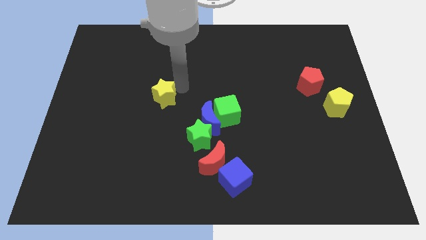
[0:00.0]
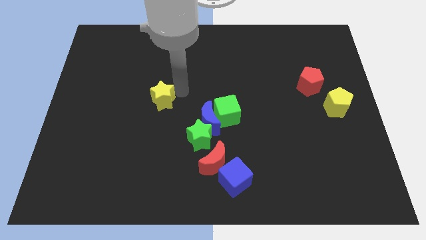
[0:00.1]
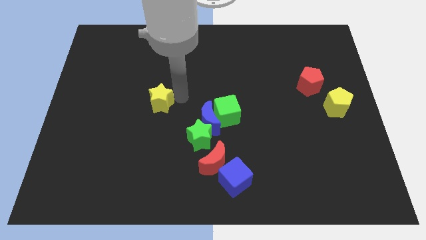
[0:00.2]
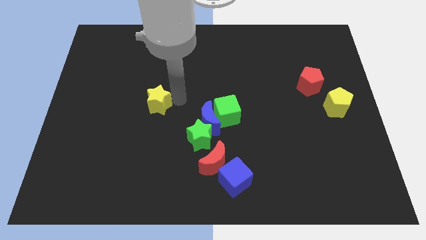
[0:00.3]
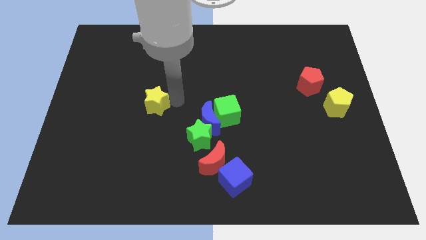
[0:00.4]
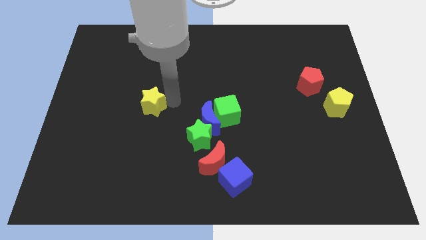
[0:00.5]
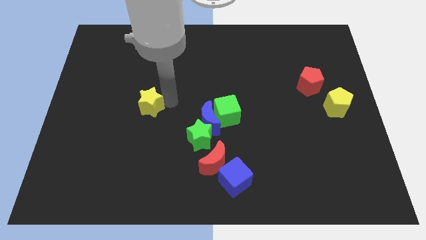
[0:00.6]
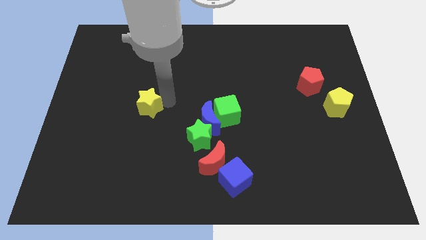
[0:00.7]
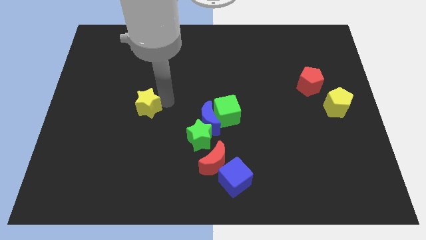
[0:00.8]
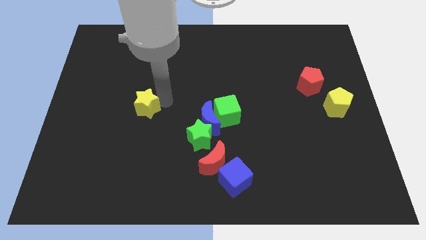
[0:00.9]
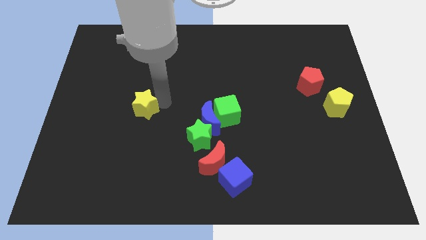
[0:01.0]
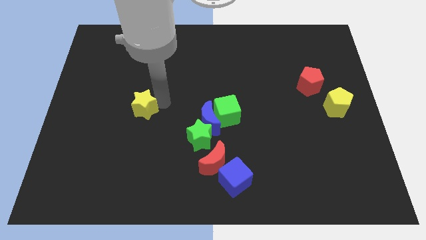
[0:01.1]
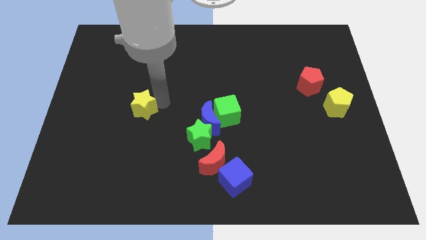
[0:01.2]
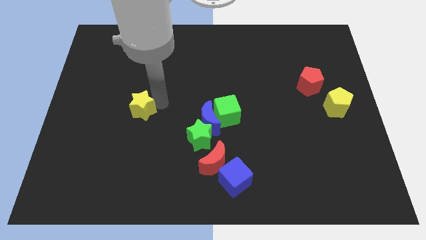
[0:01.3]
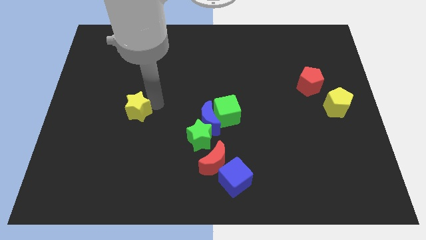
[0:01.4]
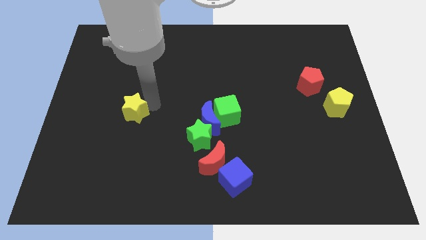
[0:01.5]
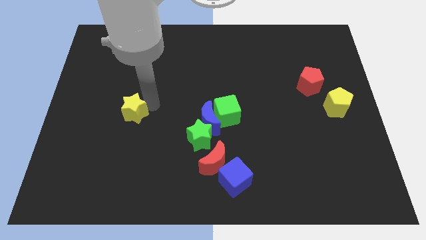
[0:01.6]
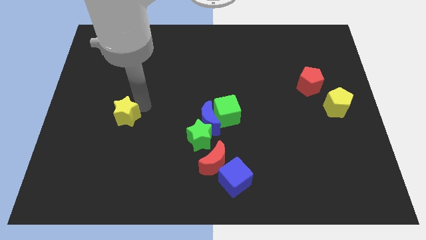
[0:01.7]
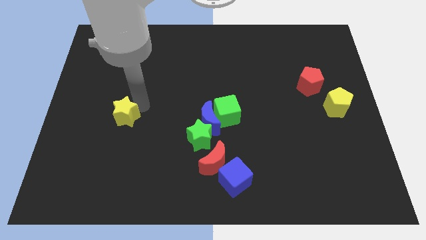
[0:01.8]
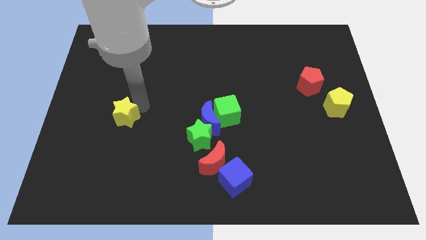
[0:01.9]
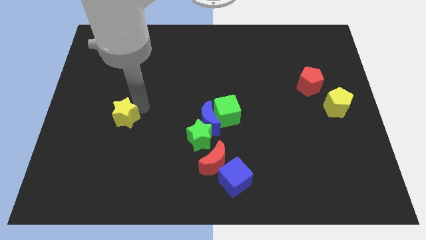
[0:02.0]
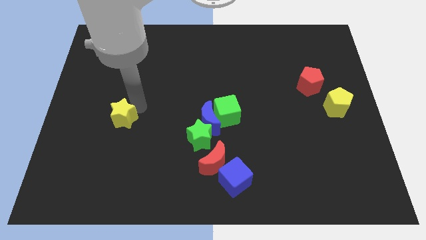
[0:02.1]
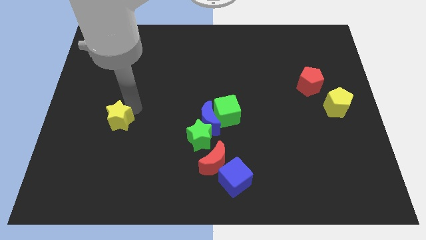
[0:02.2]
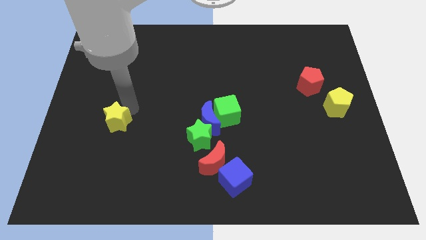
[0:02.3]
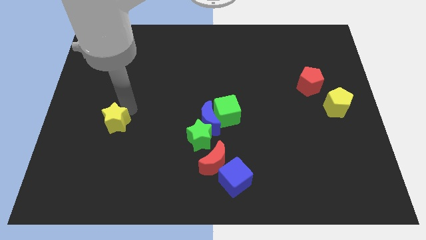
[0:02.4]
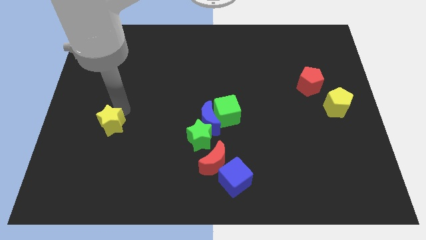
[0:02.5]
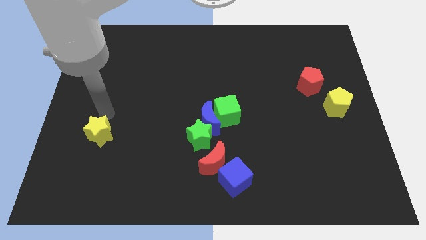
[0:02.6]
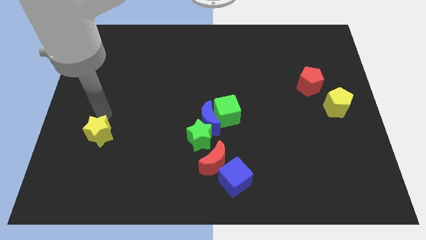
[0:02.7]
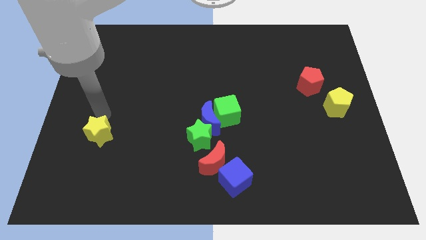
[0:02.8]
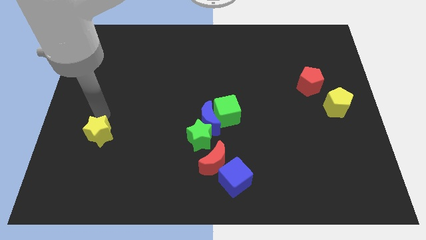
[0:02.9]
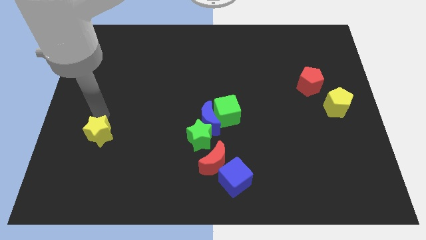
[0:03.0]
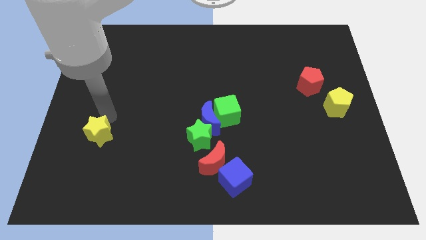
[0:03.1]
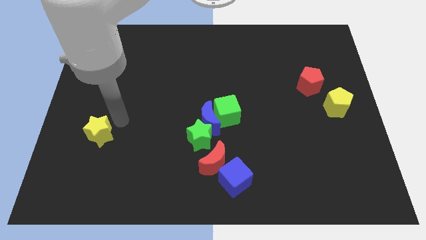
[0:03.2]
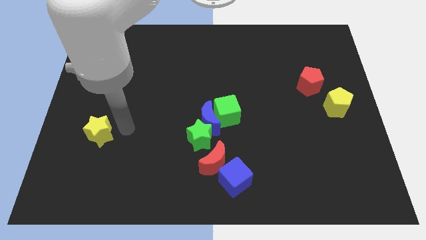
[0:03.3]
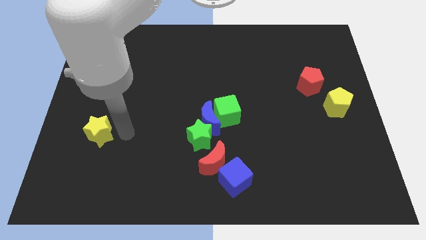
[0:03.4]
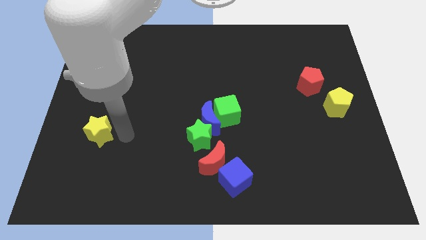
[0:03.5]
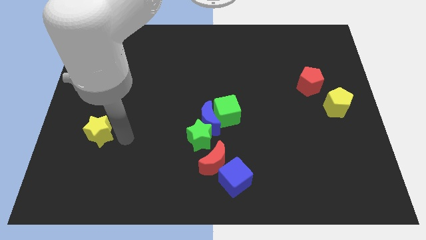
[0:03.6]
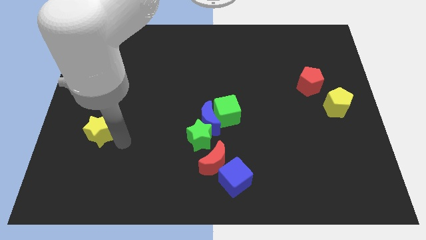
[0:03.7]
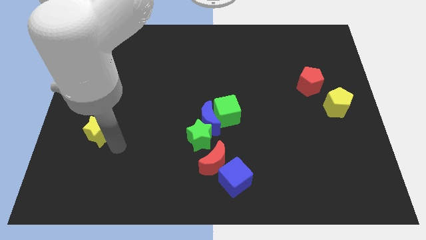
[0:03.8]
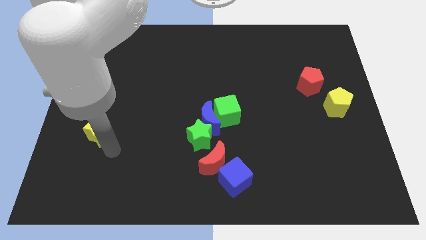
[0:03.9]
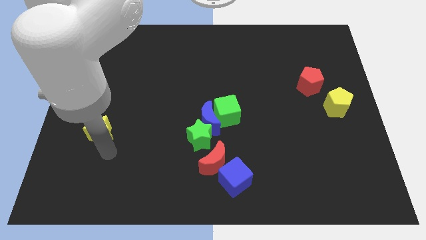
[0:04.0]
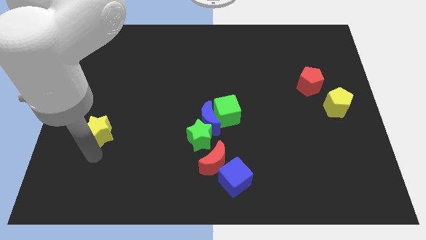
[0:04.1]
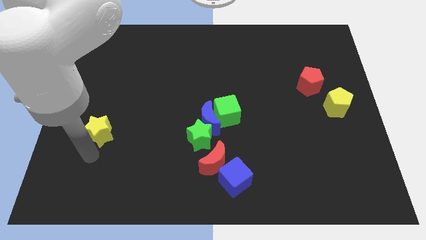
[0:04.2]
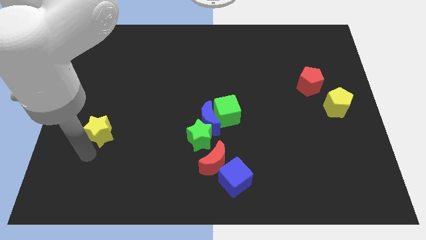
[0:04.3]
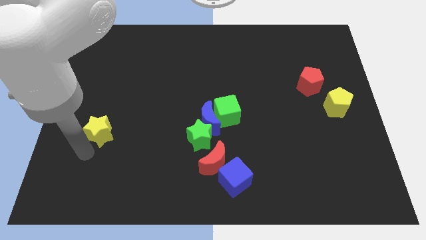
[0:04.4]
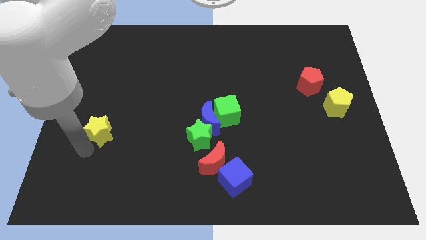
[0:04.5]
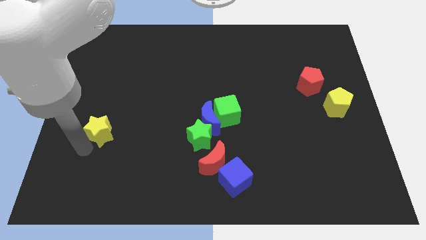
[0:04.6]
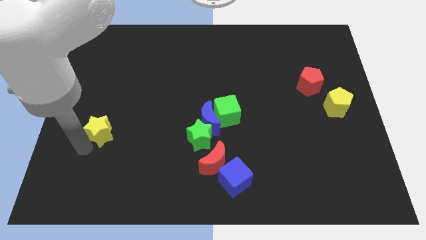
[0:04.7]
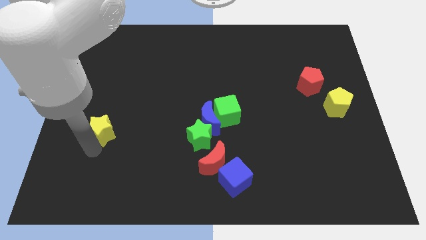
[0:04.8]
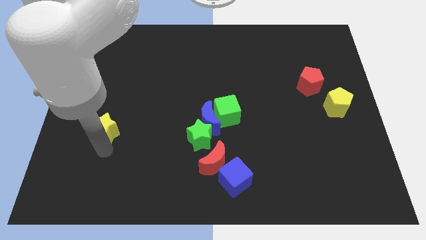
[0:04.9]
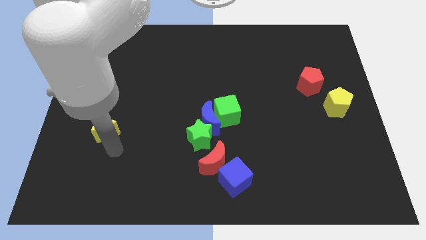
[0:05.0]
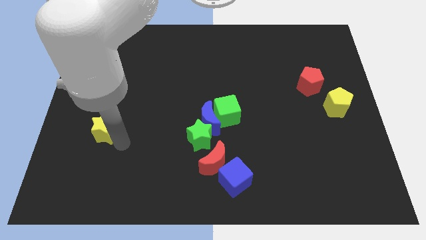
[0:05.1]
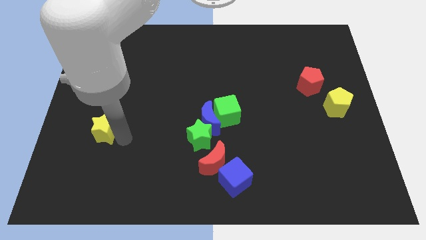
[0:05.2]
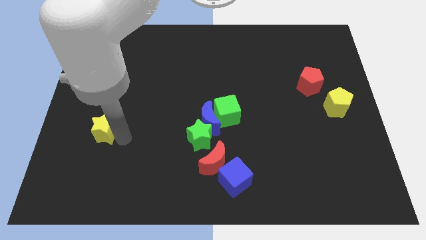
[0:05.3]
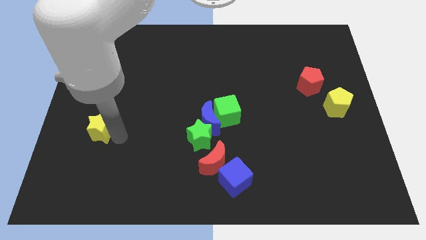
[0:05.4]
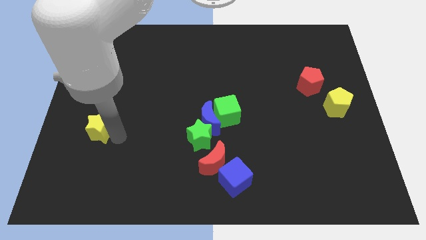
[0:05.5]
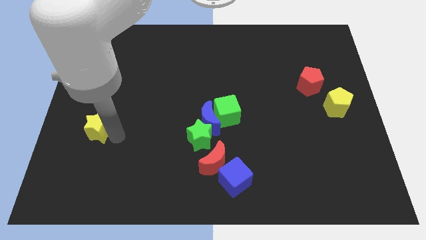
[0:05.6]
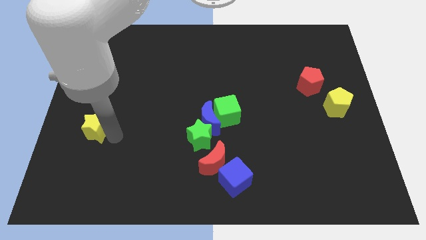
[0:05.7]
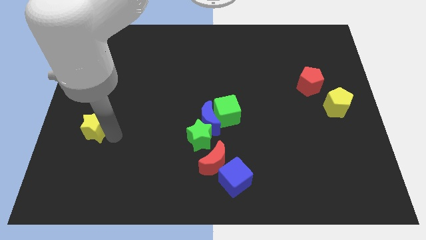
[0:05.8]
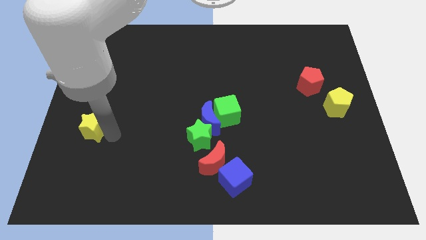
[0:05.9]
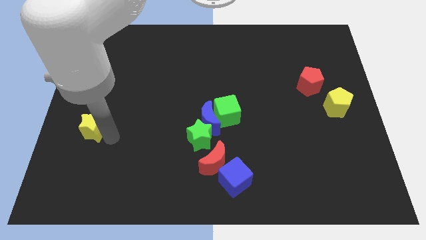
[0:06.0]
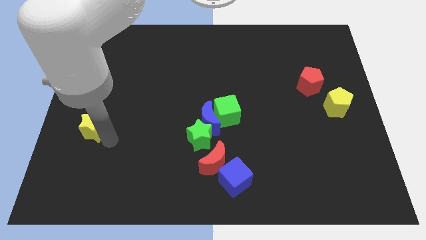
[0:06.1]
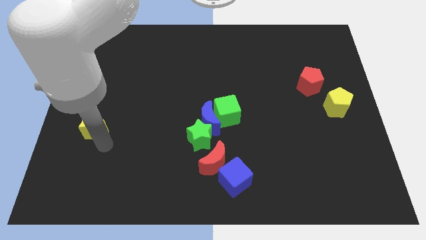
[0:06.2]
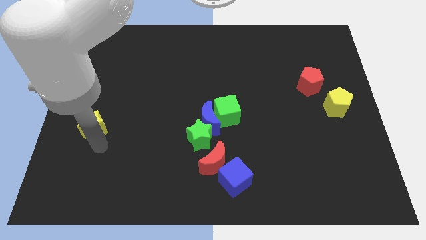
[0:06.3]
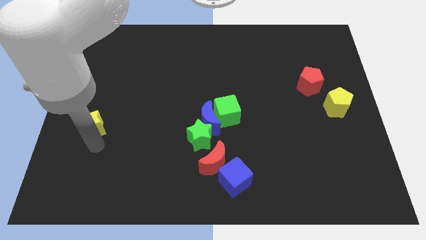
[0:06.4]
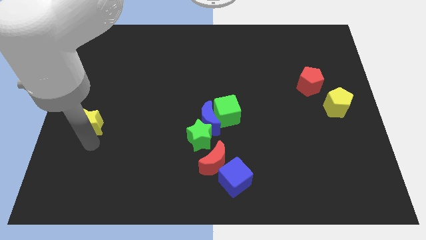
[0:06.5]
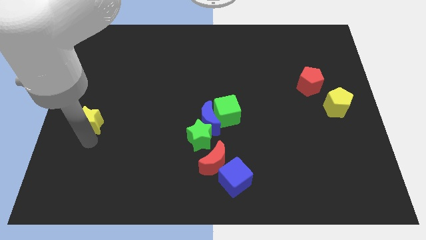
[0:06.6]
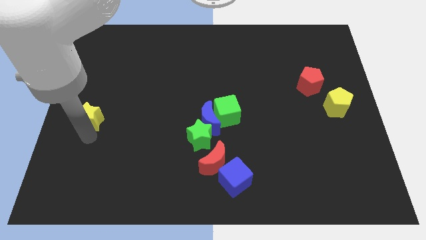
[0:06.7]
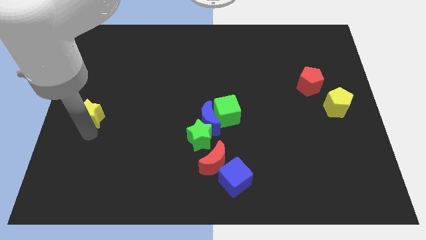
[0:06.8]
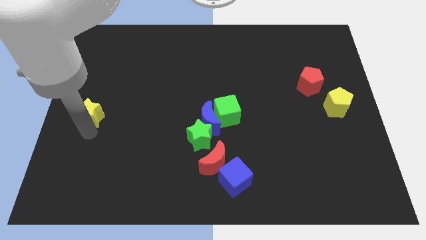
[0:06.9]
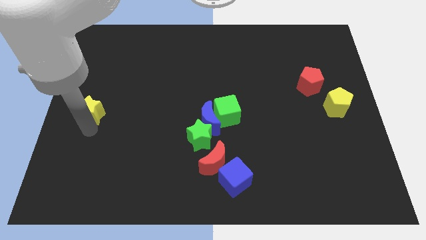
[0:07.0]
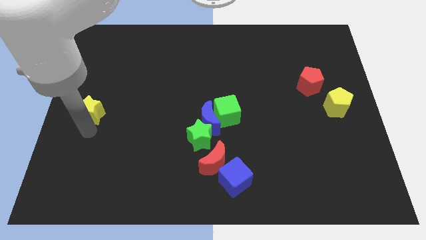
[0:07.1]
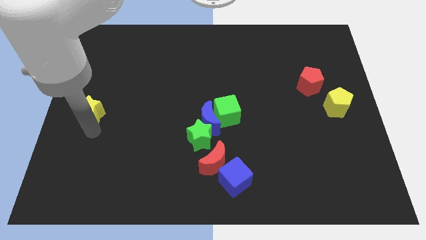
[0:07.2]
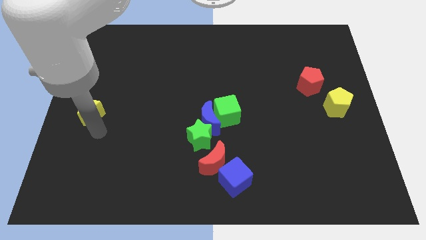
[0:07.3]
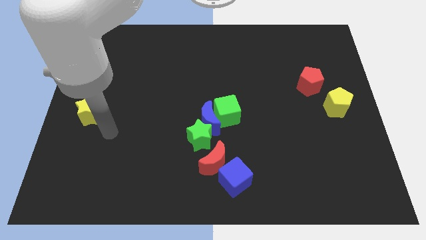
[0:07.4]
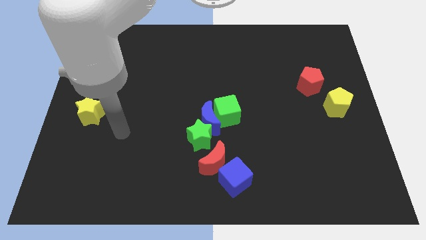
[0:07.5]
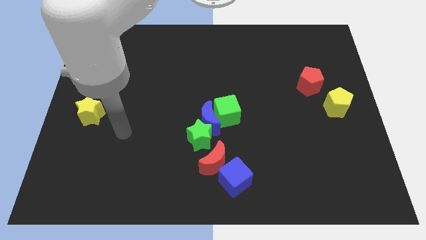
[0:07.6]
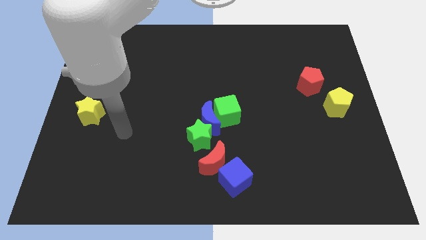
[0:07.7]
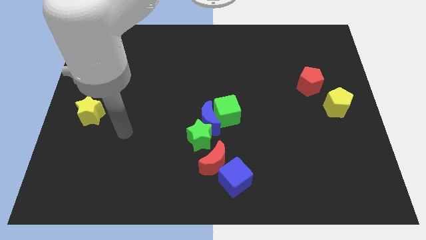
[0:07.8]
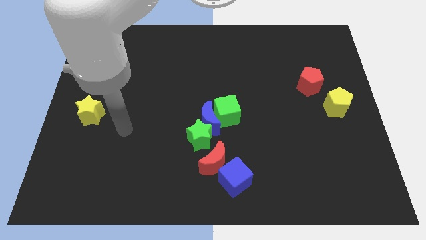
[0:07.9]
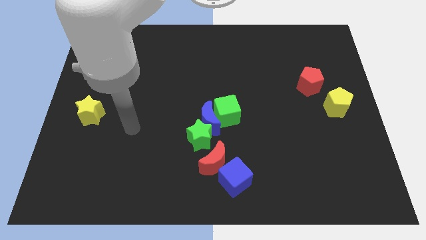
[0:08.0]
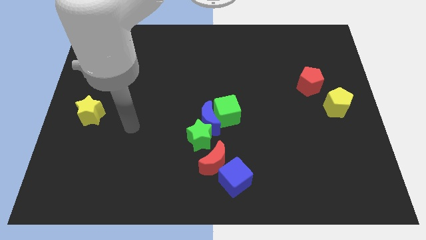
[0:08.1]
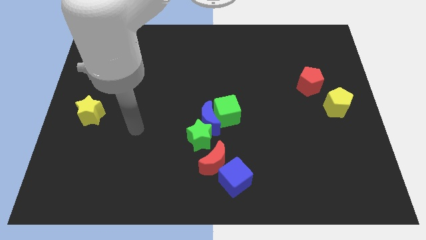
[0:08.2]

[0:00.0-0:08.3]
place the yellow star to the left side of the blue crescent

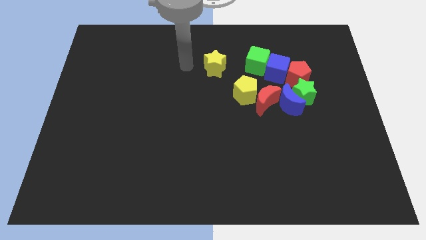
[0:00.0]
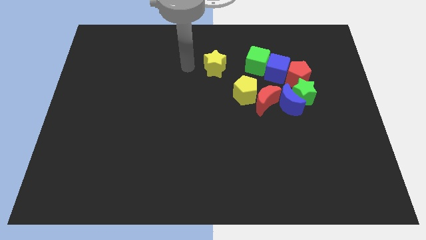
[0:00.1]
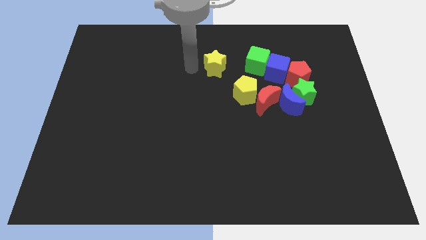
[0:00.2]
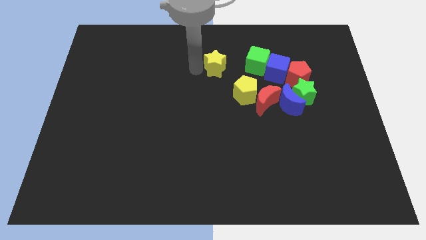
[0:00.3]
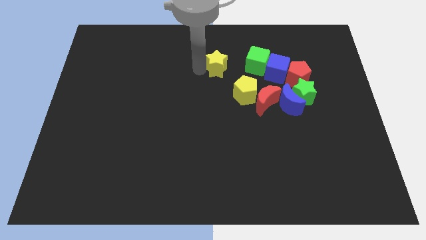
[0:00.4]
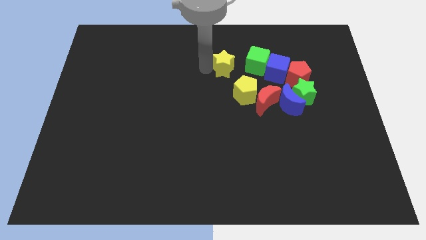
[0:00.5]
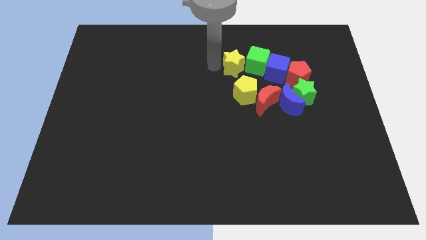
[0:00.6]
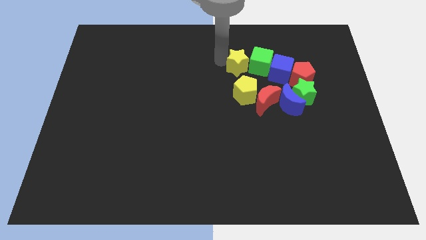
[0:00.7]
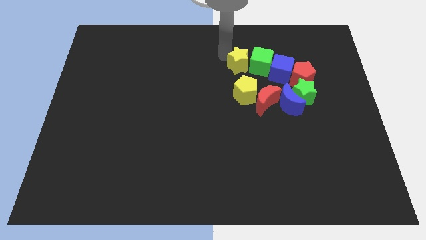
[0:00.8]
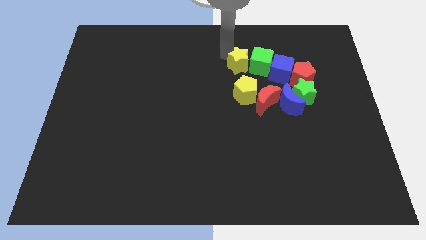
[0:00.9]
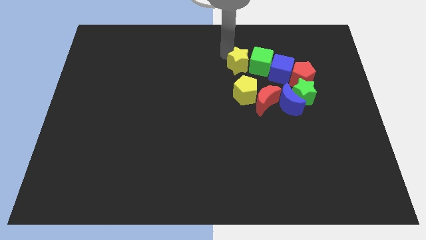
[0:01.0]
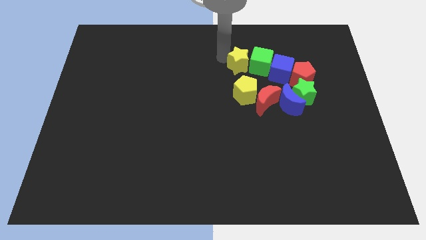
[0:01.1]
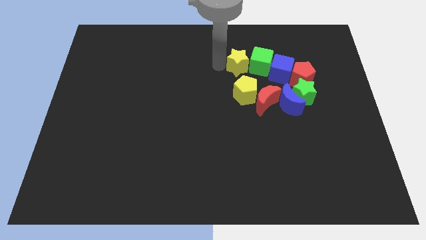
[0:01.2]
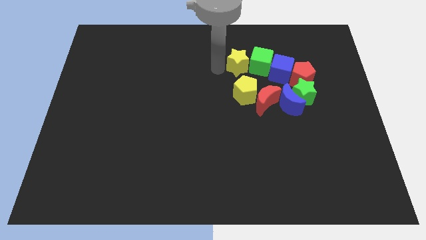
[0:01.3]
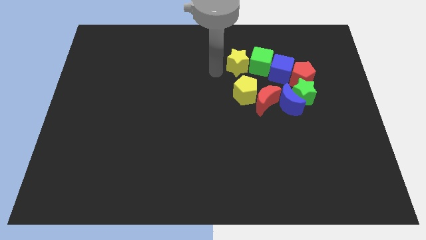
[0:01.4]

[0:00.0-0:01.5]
move the yellow star into the green cube
